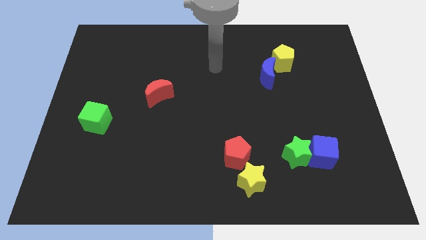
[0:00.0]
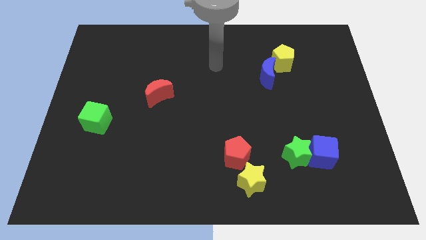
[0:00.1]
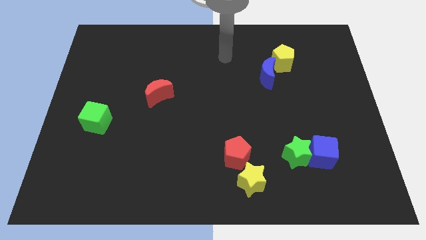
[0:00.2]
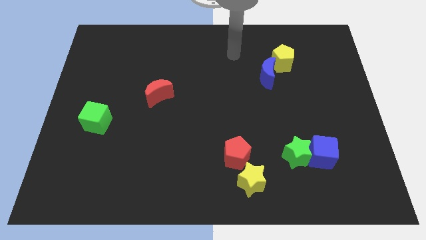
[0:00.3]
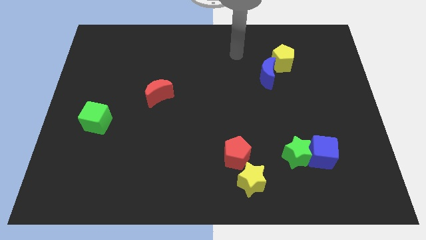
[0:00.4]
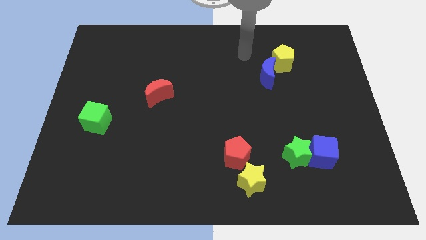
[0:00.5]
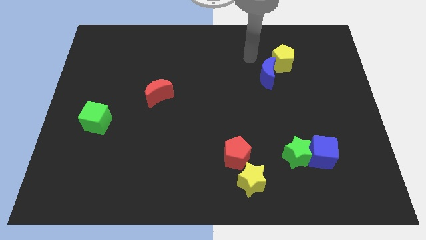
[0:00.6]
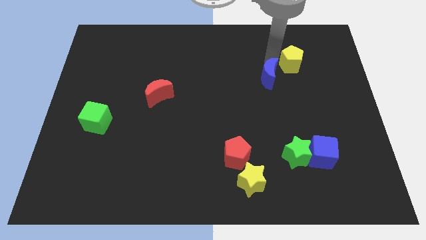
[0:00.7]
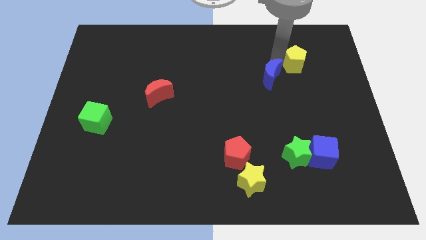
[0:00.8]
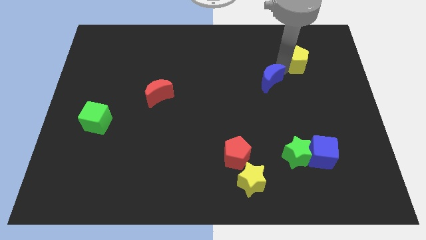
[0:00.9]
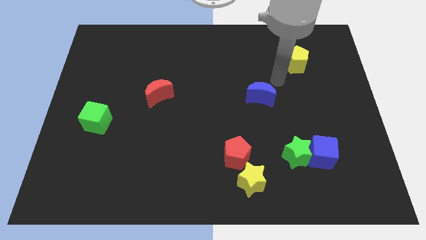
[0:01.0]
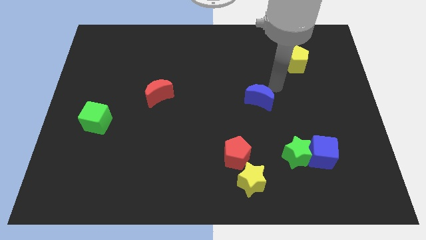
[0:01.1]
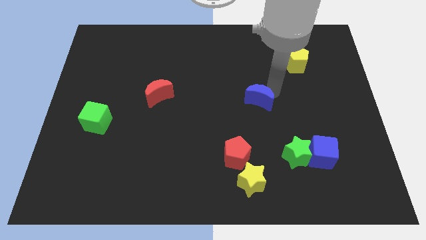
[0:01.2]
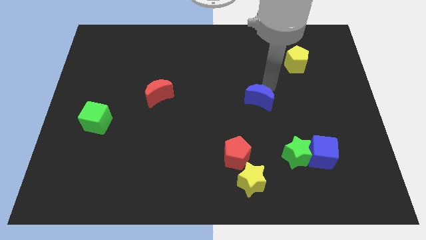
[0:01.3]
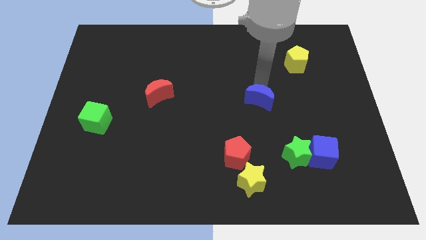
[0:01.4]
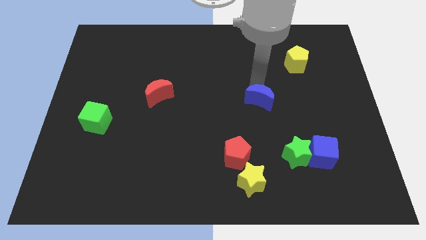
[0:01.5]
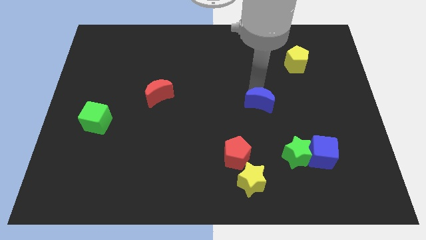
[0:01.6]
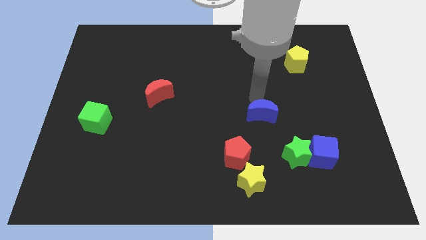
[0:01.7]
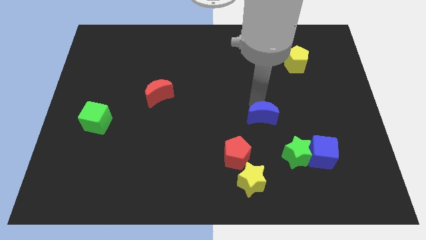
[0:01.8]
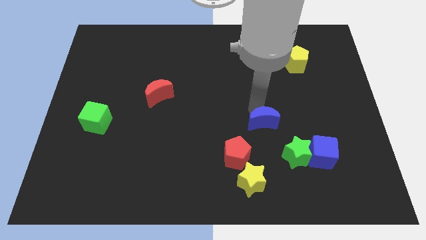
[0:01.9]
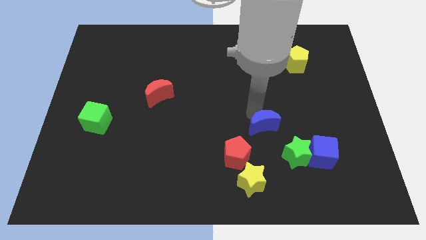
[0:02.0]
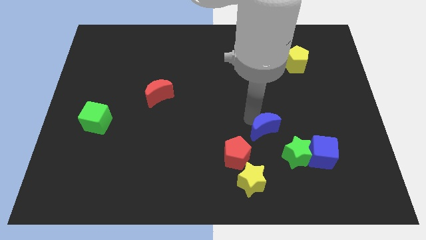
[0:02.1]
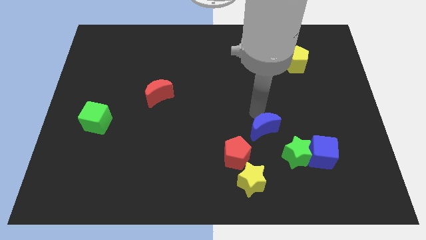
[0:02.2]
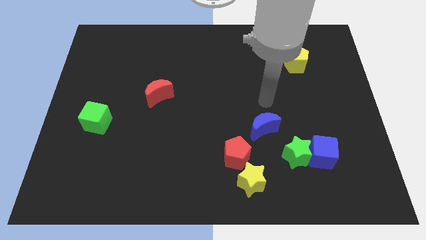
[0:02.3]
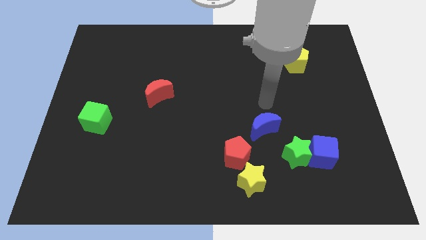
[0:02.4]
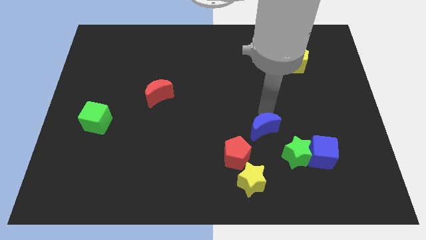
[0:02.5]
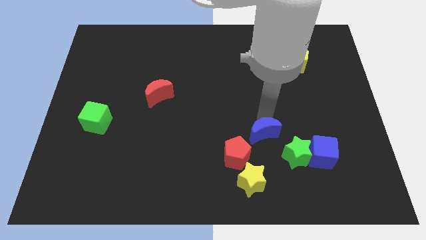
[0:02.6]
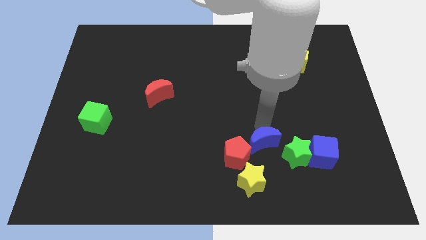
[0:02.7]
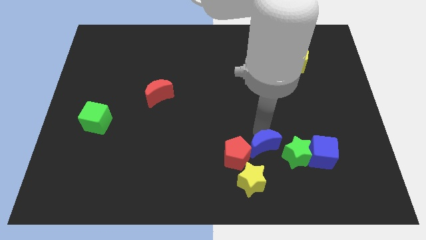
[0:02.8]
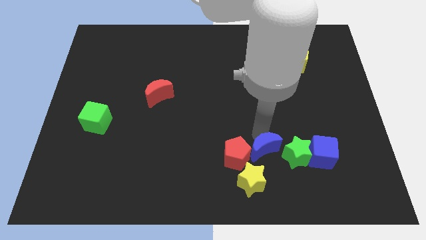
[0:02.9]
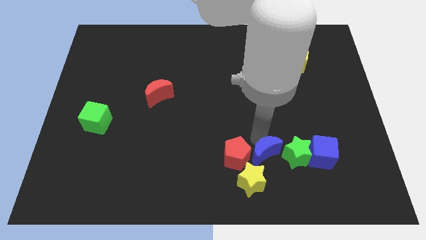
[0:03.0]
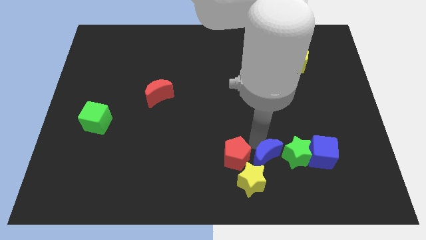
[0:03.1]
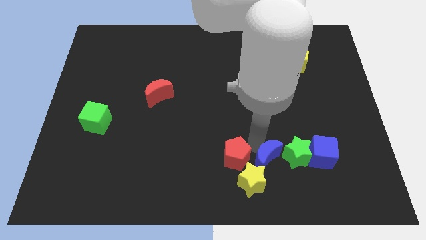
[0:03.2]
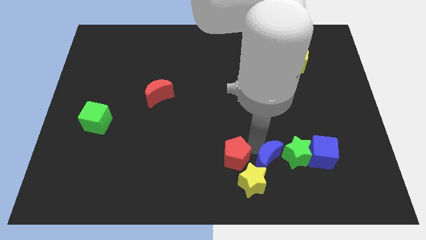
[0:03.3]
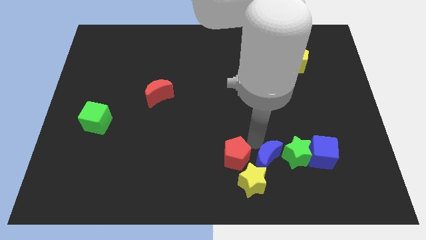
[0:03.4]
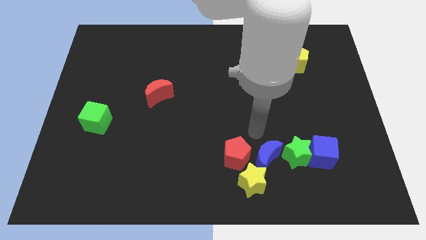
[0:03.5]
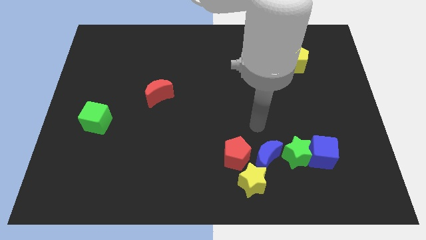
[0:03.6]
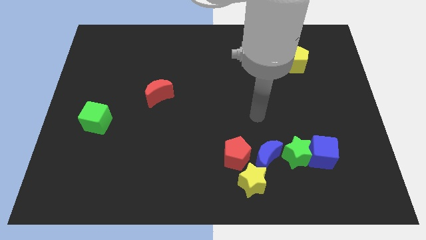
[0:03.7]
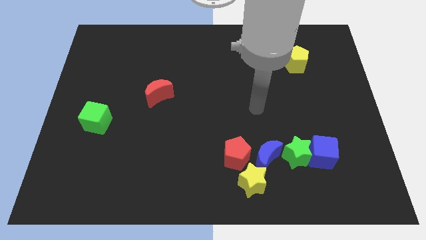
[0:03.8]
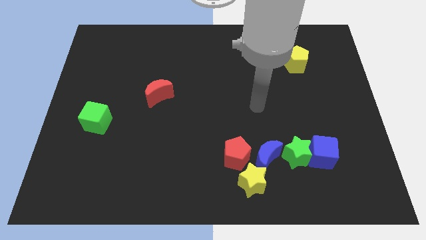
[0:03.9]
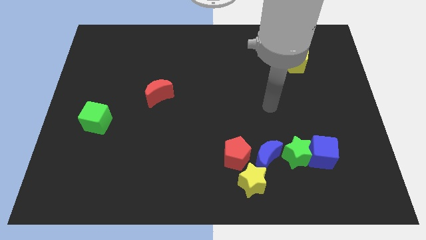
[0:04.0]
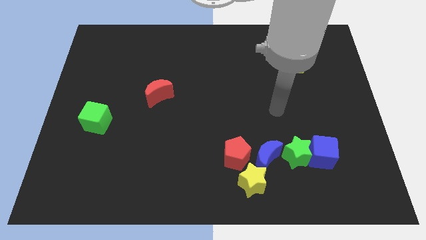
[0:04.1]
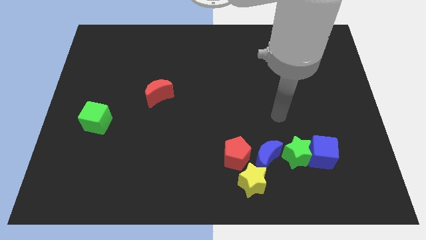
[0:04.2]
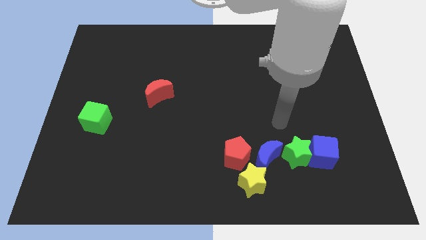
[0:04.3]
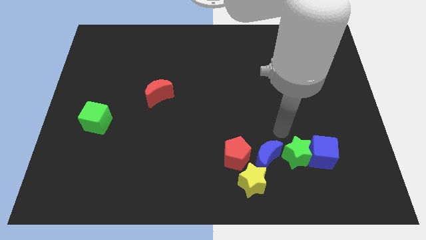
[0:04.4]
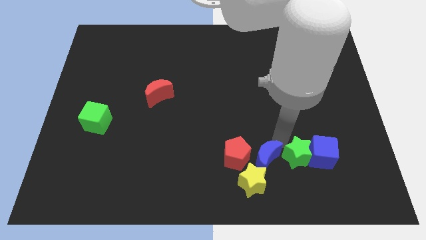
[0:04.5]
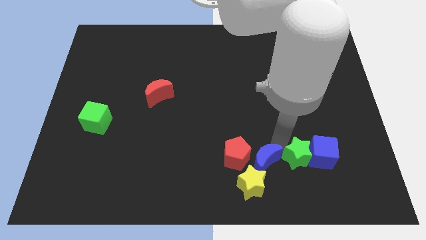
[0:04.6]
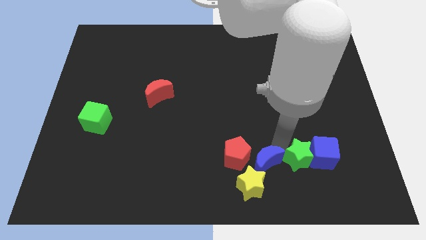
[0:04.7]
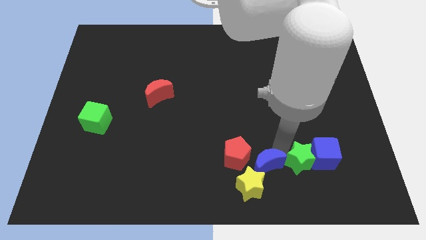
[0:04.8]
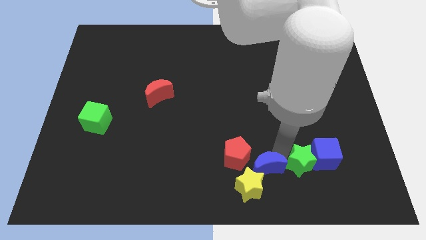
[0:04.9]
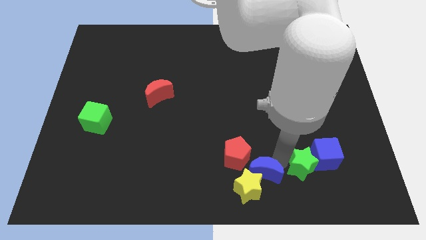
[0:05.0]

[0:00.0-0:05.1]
slide the blue moon to the yellow star

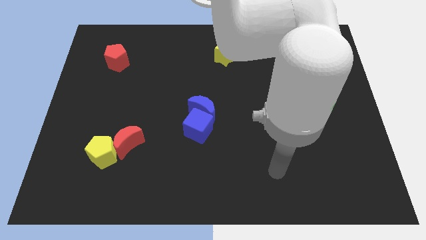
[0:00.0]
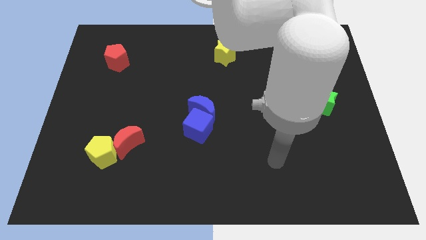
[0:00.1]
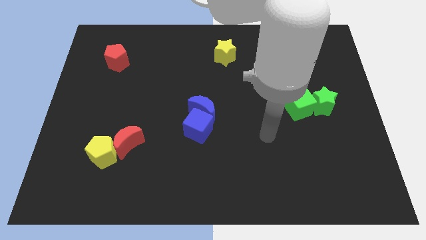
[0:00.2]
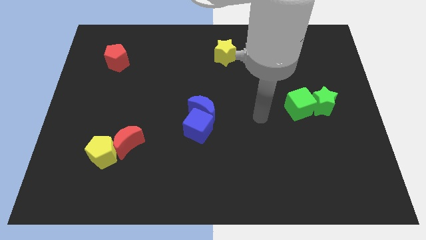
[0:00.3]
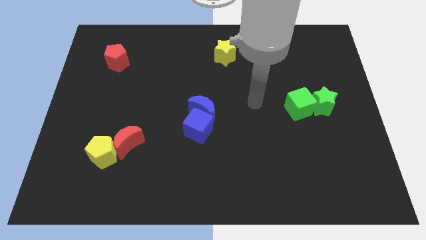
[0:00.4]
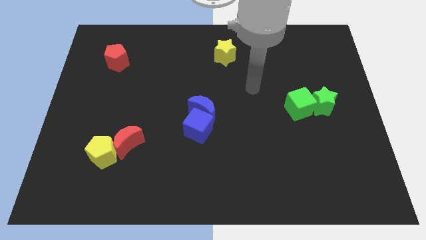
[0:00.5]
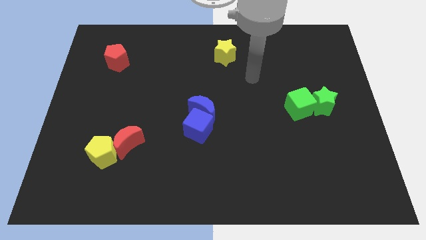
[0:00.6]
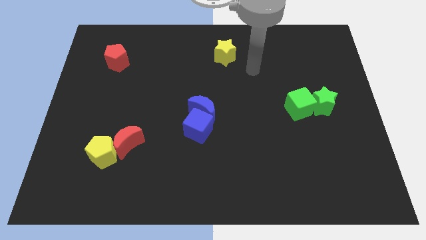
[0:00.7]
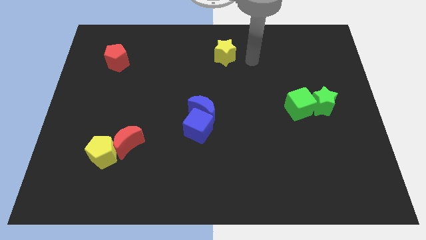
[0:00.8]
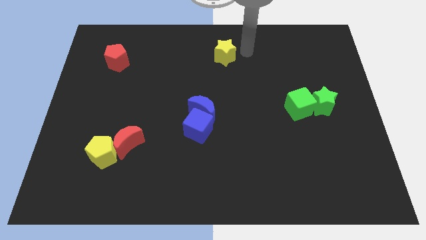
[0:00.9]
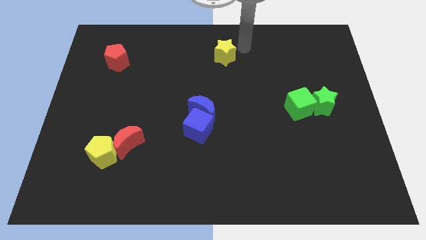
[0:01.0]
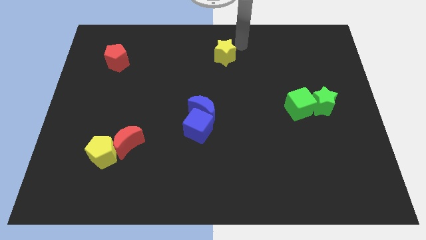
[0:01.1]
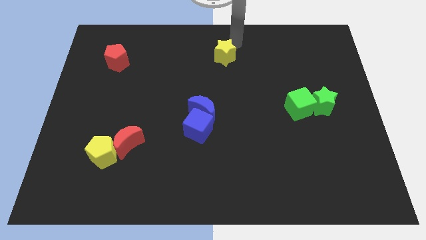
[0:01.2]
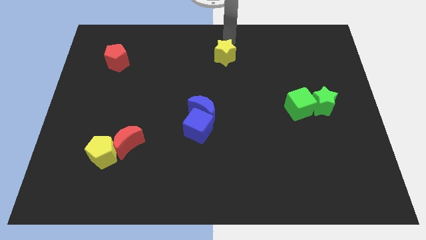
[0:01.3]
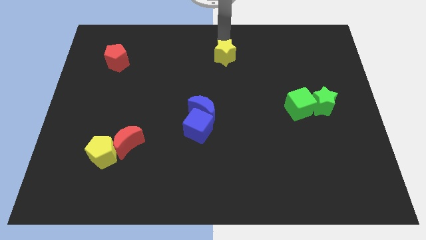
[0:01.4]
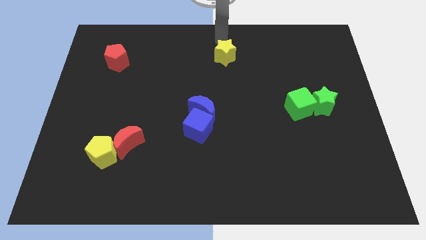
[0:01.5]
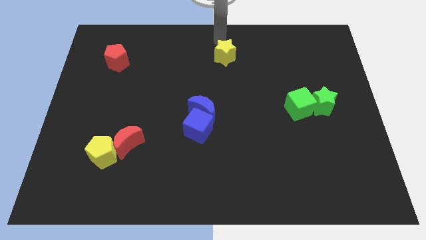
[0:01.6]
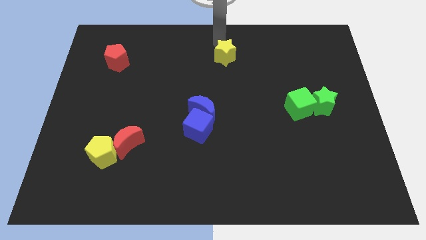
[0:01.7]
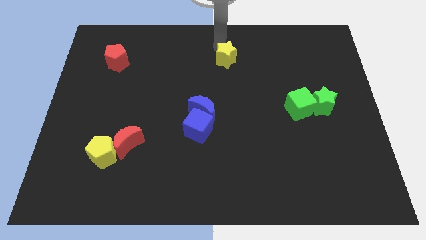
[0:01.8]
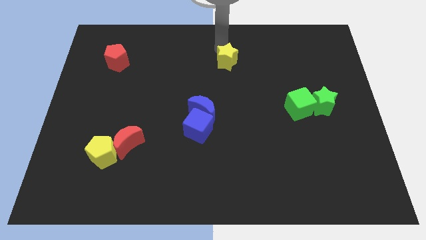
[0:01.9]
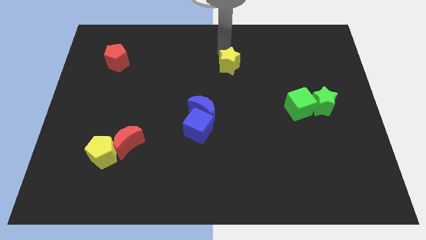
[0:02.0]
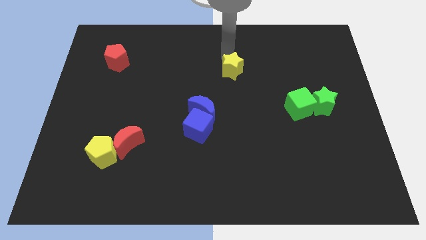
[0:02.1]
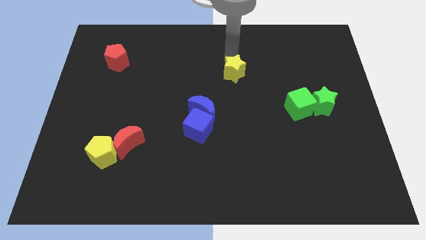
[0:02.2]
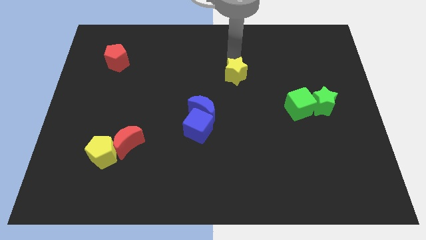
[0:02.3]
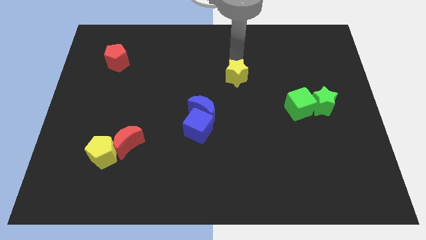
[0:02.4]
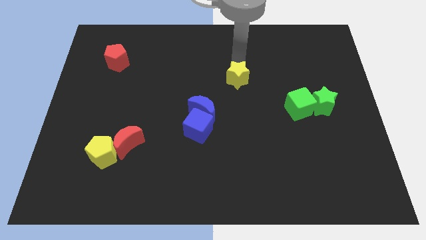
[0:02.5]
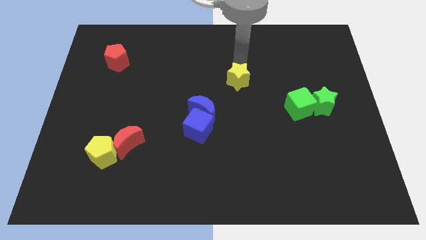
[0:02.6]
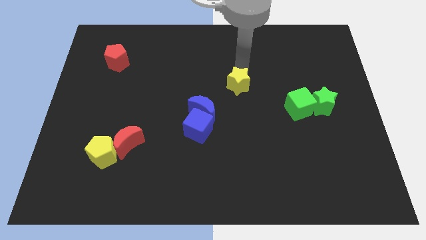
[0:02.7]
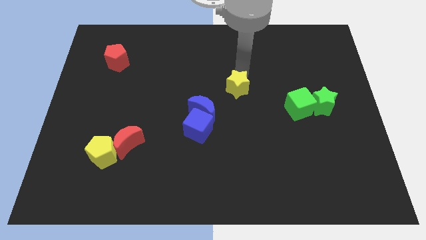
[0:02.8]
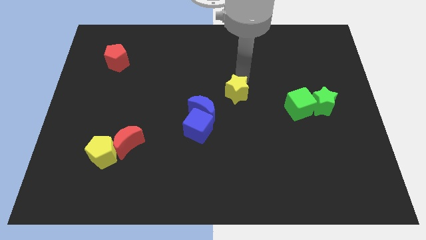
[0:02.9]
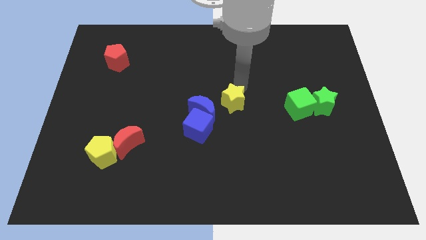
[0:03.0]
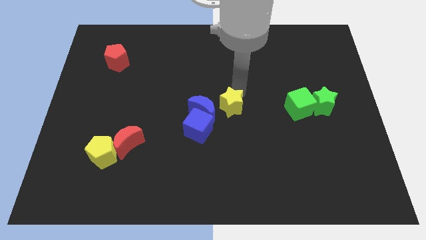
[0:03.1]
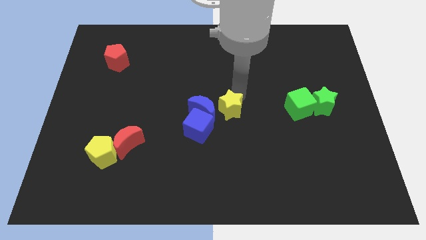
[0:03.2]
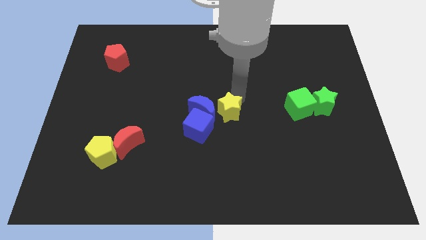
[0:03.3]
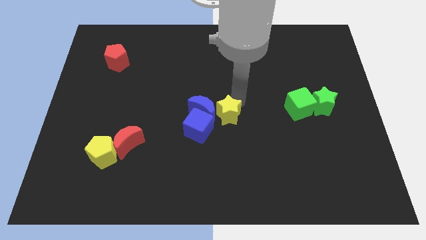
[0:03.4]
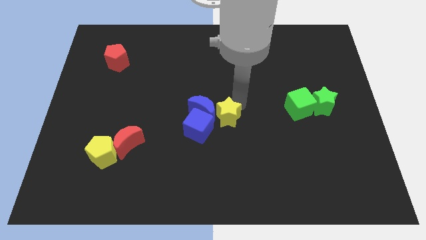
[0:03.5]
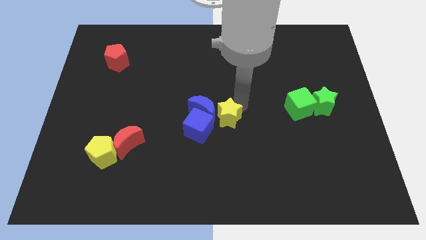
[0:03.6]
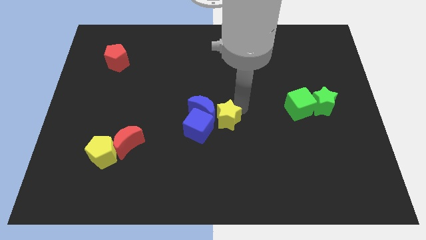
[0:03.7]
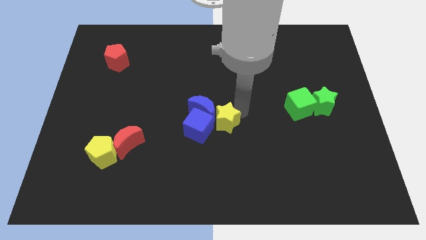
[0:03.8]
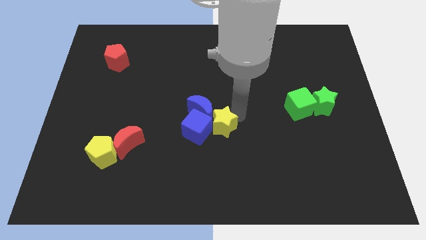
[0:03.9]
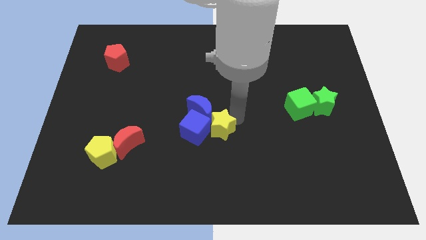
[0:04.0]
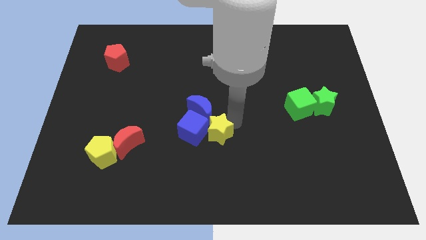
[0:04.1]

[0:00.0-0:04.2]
put the yellow star next to the blue cube
